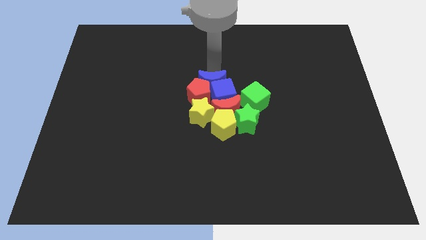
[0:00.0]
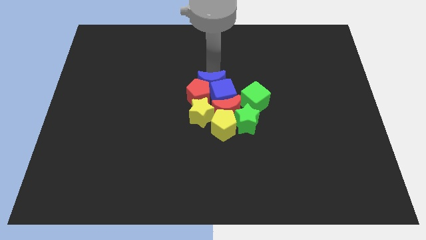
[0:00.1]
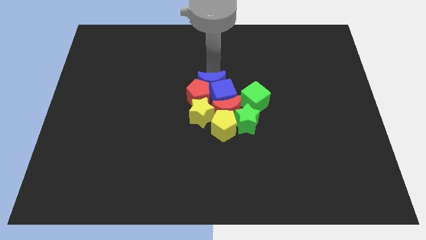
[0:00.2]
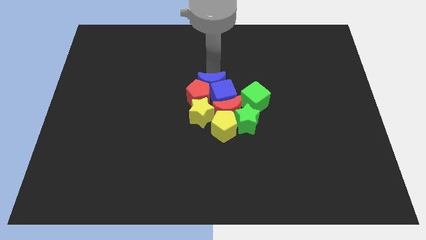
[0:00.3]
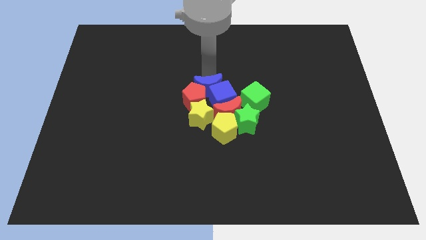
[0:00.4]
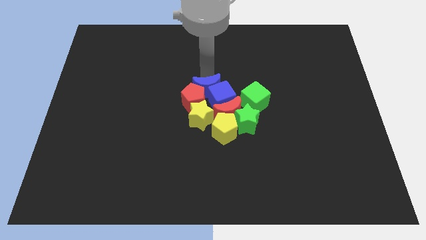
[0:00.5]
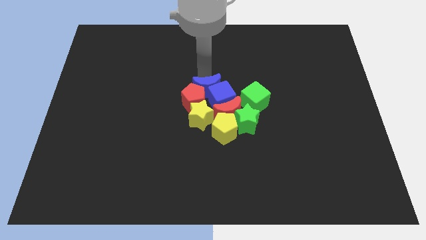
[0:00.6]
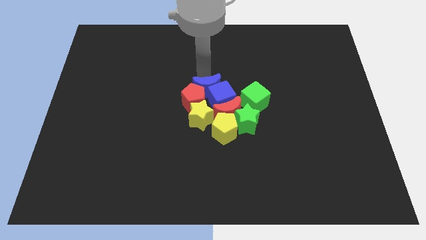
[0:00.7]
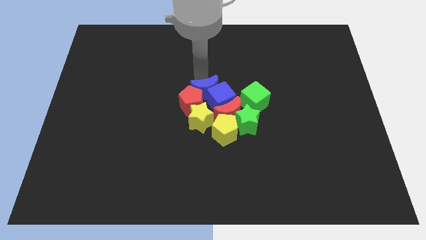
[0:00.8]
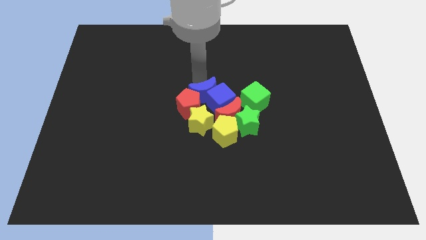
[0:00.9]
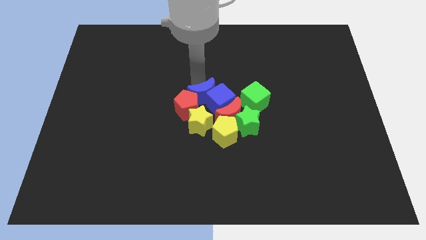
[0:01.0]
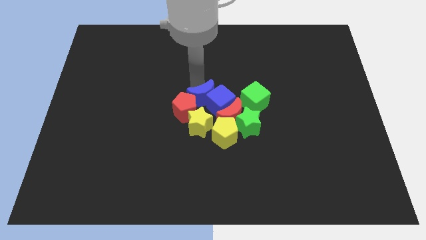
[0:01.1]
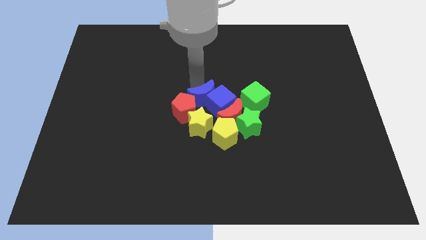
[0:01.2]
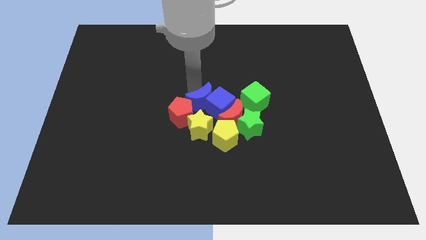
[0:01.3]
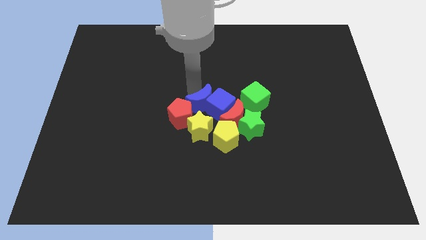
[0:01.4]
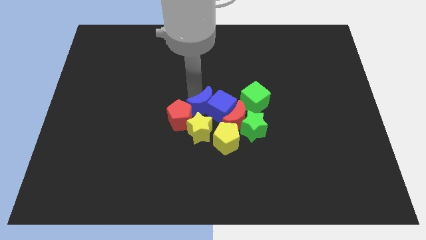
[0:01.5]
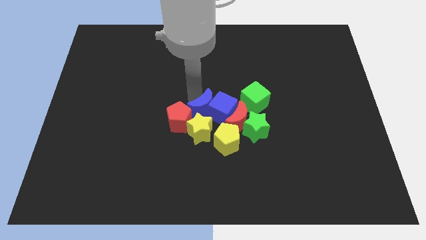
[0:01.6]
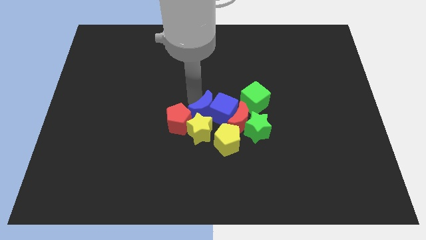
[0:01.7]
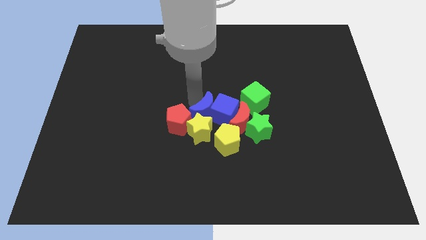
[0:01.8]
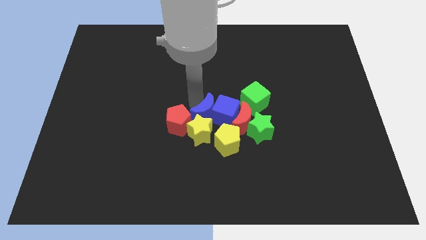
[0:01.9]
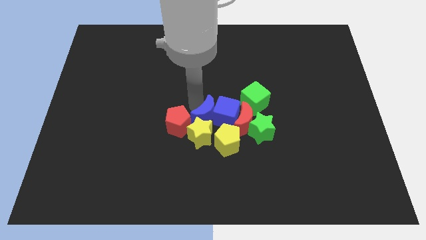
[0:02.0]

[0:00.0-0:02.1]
push the group of blocks to the bottom

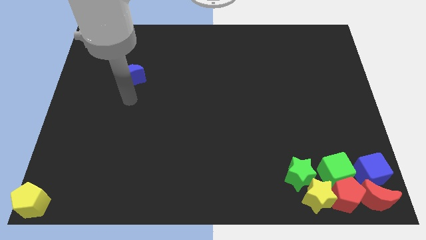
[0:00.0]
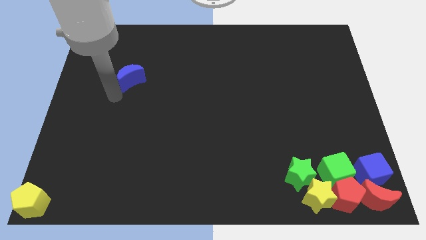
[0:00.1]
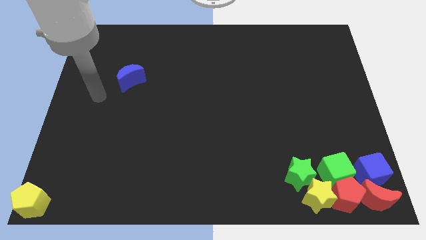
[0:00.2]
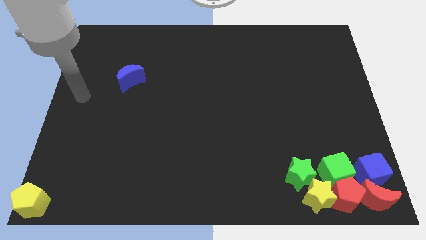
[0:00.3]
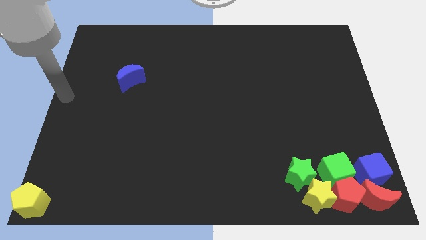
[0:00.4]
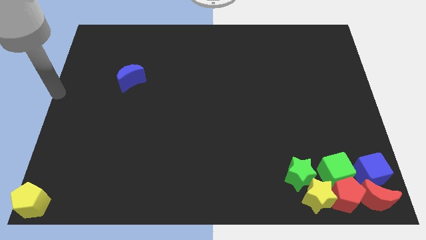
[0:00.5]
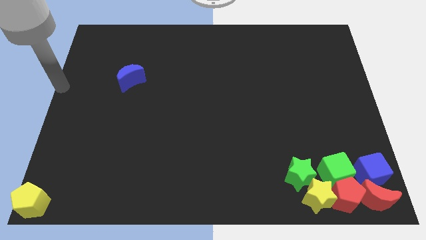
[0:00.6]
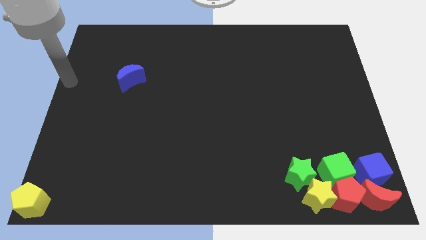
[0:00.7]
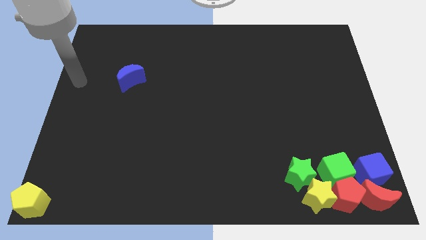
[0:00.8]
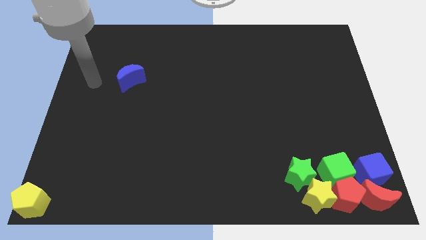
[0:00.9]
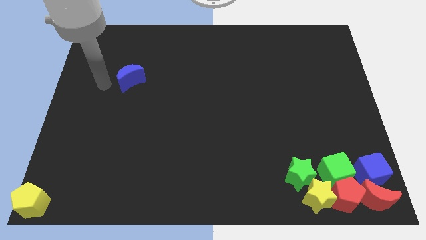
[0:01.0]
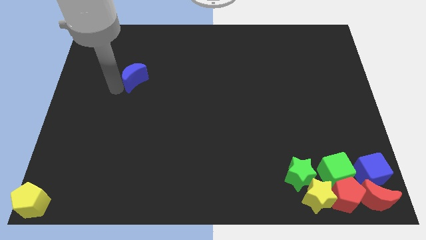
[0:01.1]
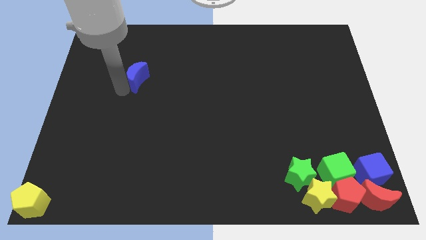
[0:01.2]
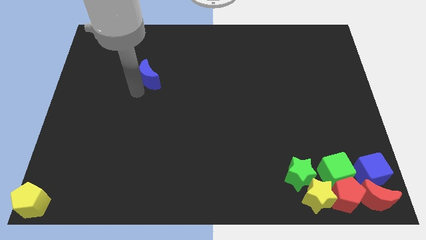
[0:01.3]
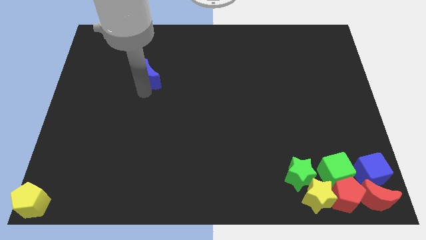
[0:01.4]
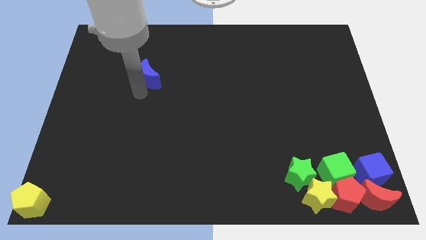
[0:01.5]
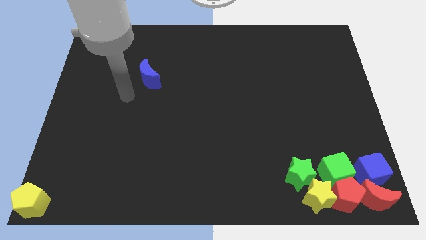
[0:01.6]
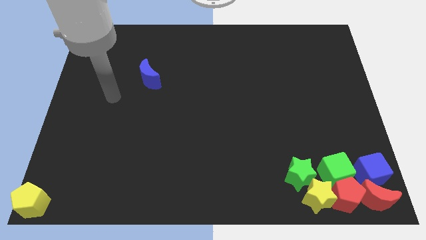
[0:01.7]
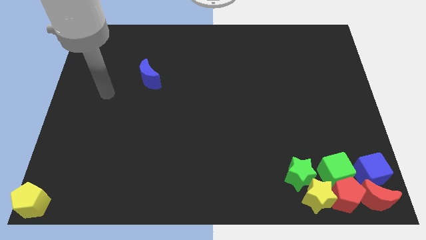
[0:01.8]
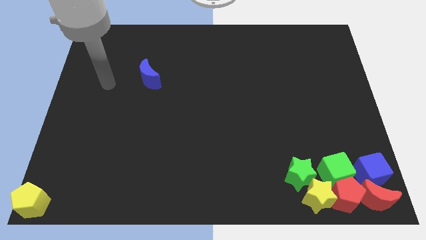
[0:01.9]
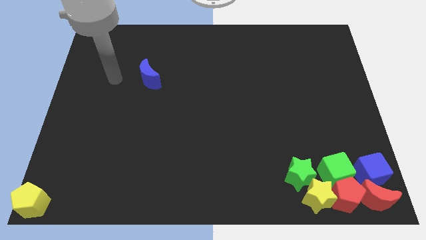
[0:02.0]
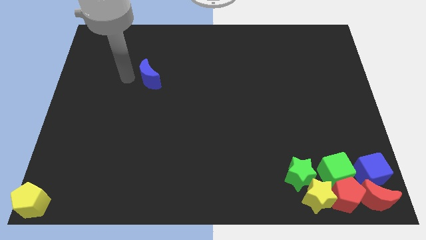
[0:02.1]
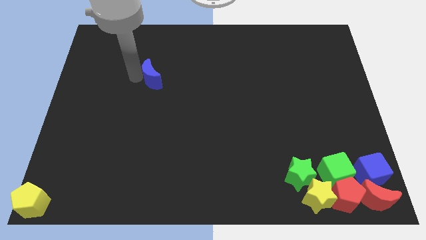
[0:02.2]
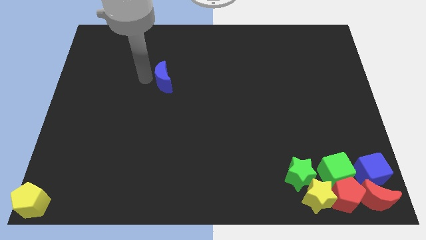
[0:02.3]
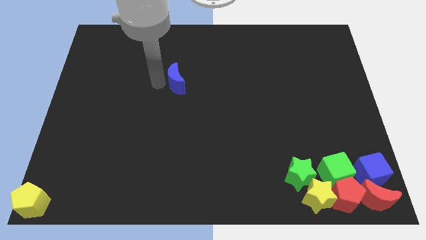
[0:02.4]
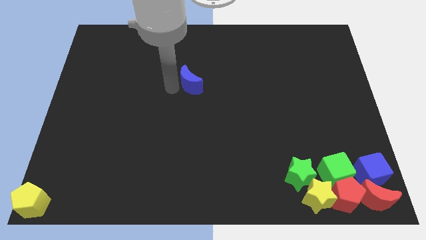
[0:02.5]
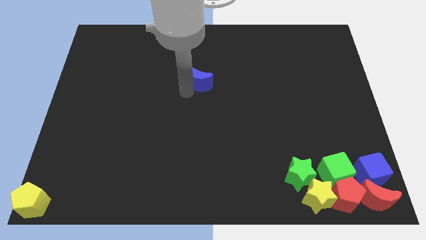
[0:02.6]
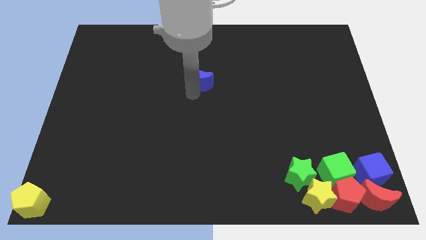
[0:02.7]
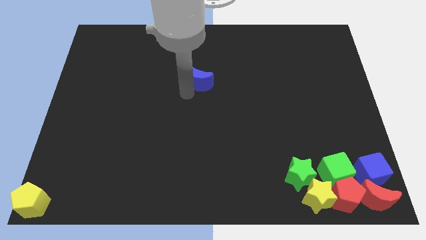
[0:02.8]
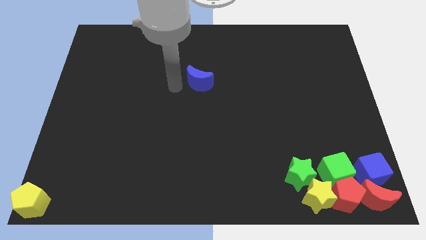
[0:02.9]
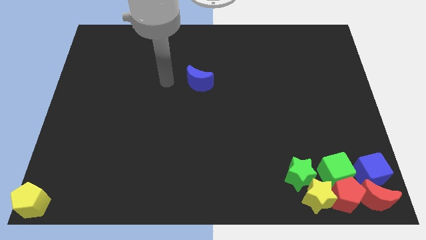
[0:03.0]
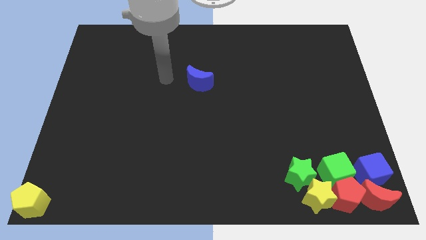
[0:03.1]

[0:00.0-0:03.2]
move blue moon slightly to the right

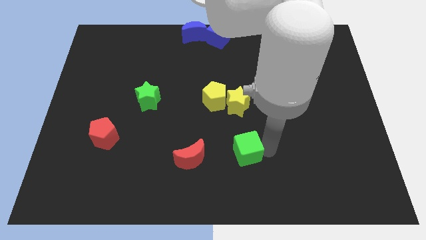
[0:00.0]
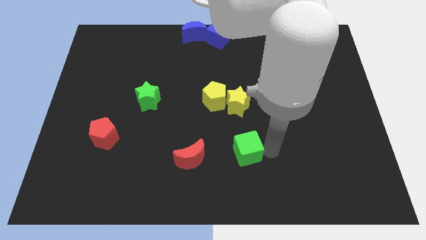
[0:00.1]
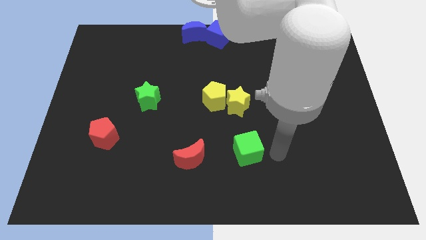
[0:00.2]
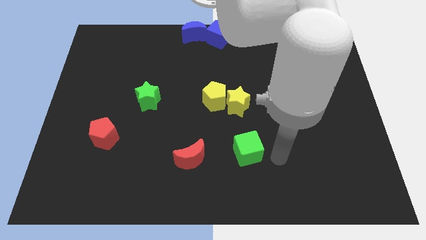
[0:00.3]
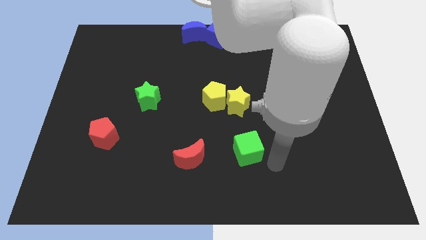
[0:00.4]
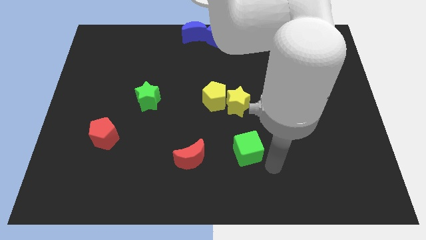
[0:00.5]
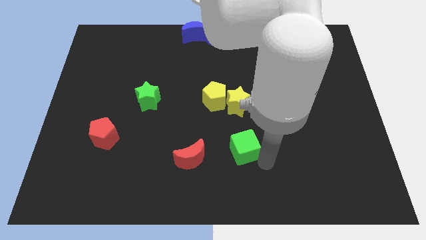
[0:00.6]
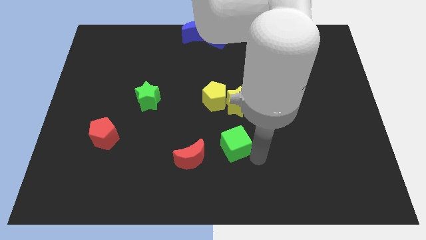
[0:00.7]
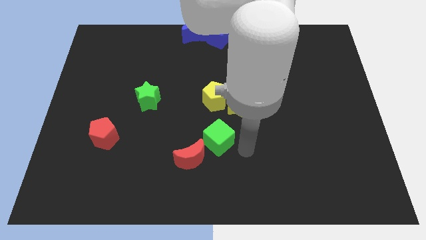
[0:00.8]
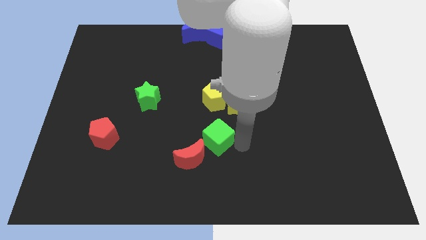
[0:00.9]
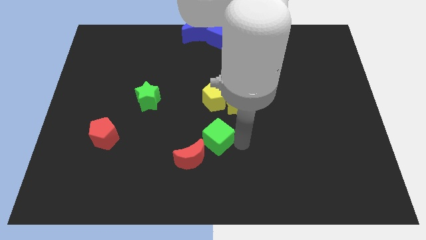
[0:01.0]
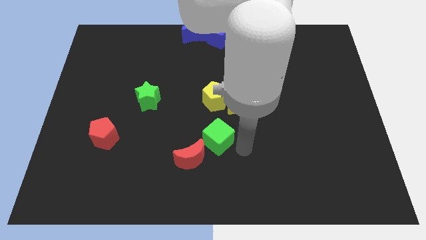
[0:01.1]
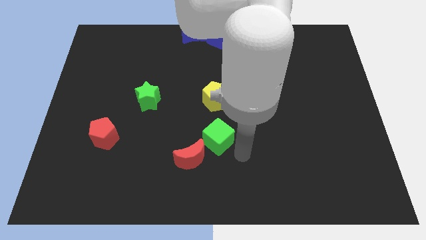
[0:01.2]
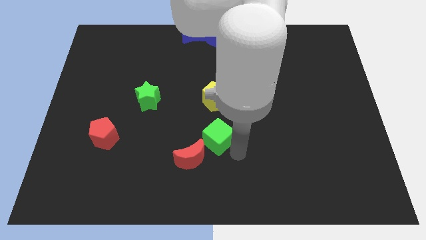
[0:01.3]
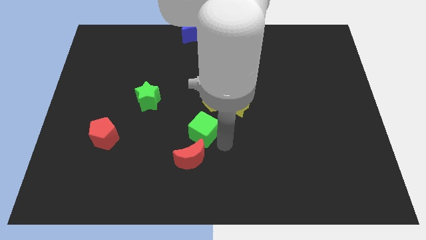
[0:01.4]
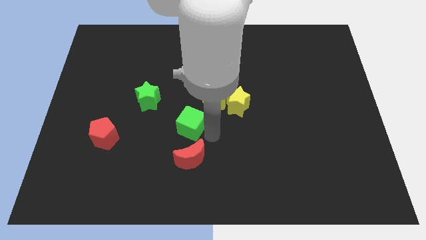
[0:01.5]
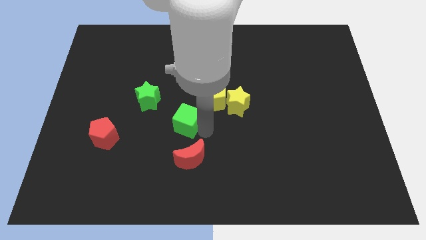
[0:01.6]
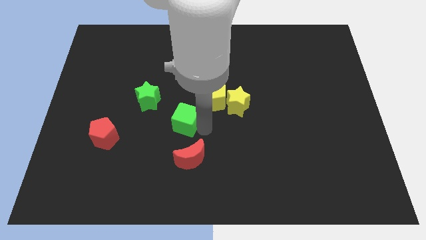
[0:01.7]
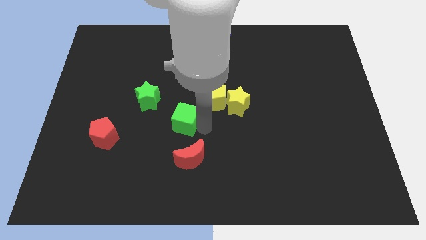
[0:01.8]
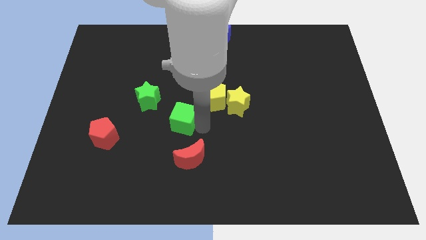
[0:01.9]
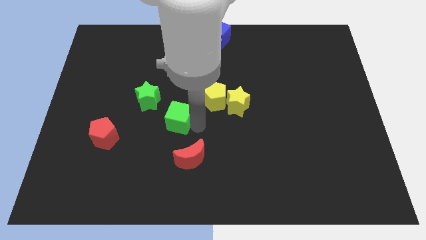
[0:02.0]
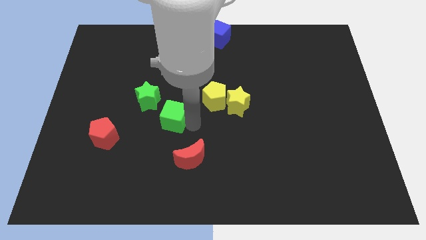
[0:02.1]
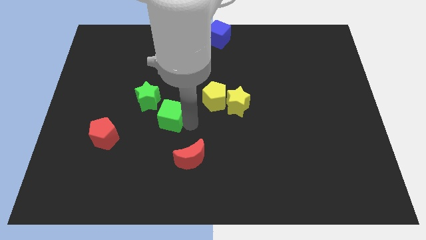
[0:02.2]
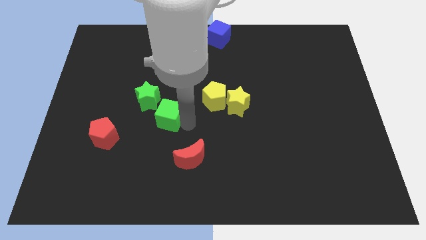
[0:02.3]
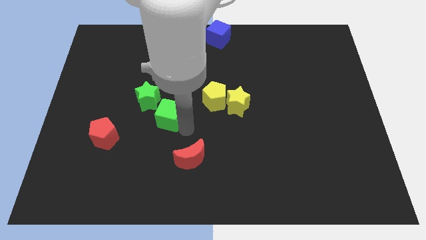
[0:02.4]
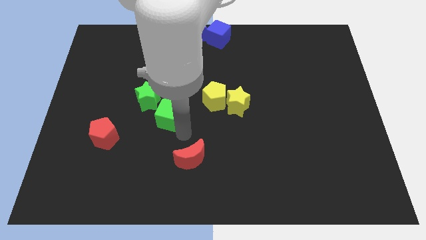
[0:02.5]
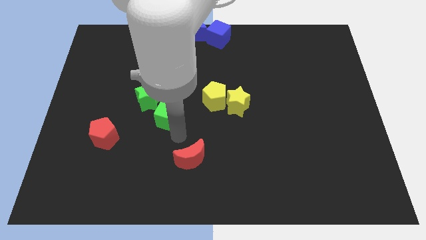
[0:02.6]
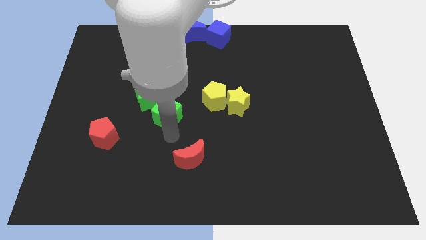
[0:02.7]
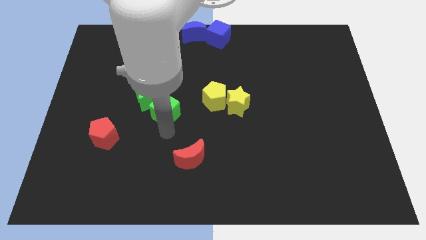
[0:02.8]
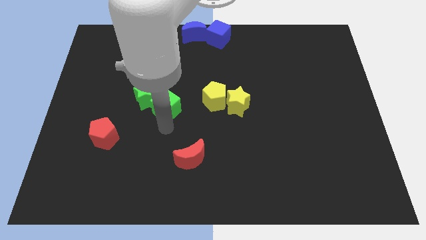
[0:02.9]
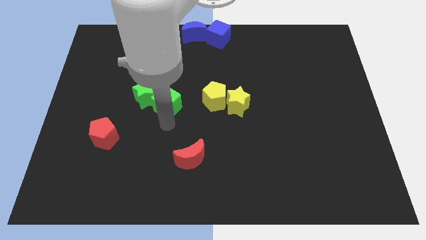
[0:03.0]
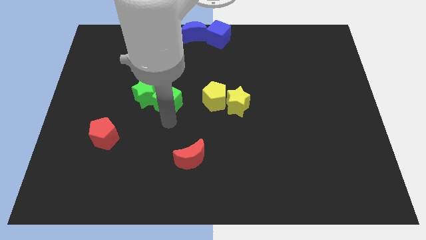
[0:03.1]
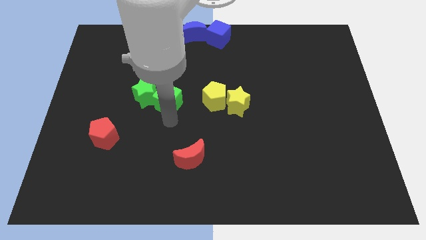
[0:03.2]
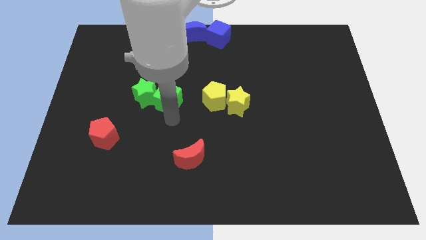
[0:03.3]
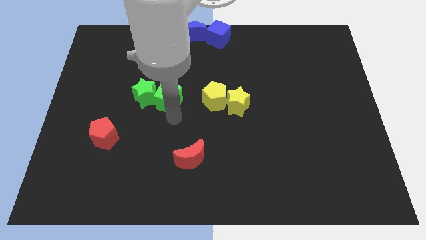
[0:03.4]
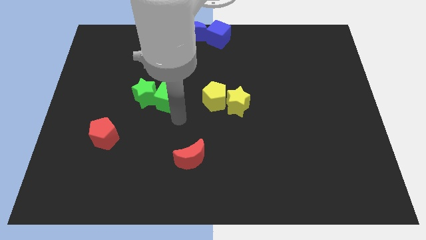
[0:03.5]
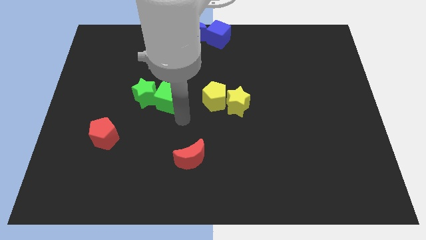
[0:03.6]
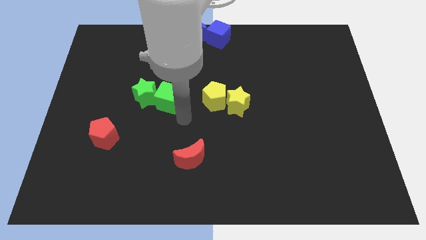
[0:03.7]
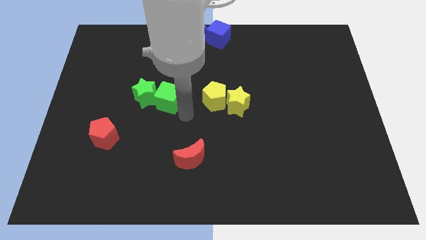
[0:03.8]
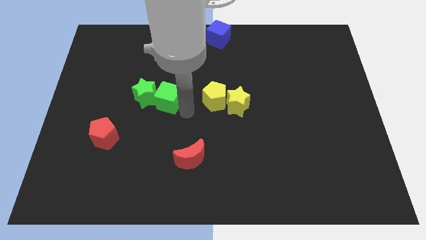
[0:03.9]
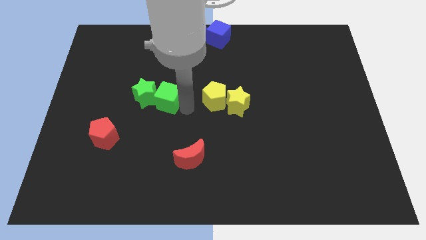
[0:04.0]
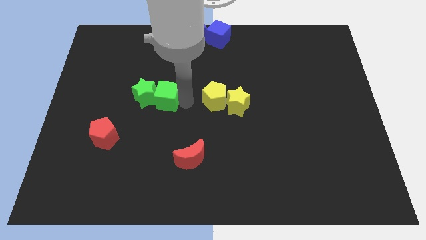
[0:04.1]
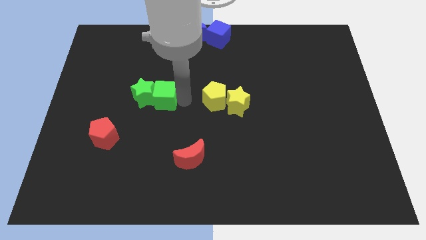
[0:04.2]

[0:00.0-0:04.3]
place the green cube in between green star and yellow pentagon
